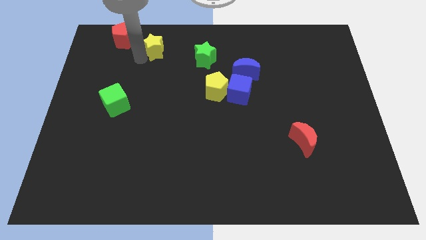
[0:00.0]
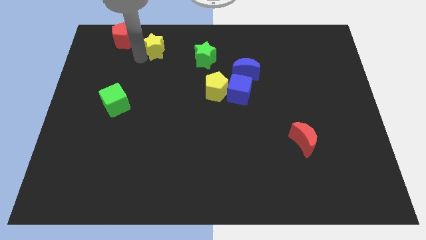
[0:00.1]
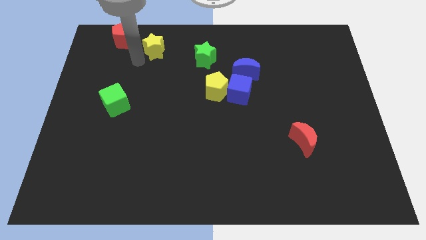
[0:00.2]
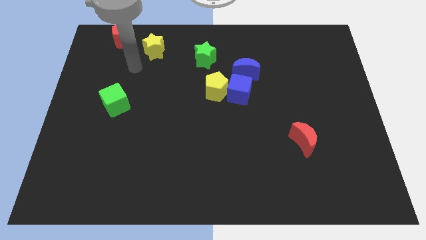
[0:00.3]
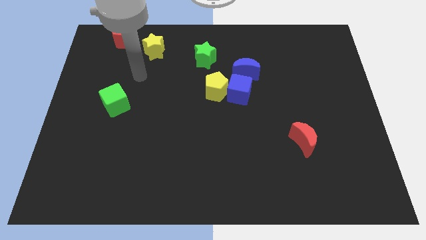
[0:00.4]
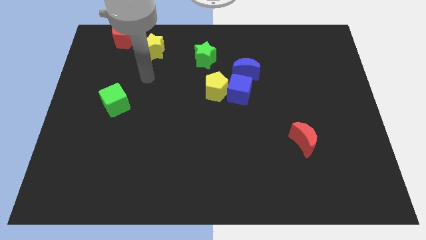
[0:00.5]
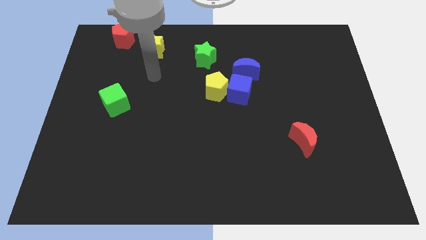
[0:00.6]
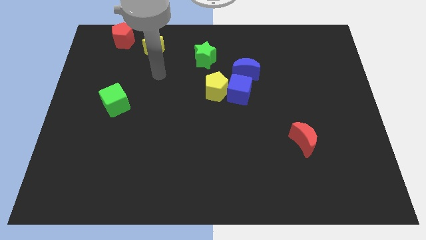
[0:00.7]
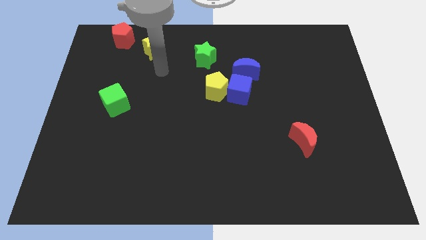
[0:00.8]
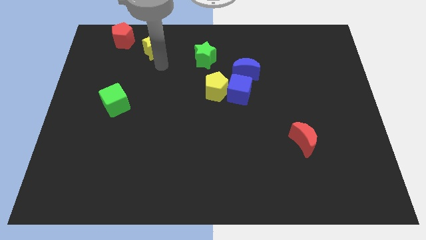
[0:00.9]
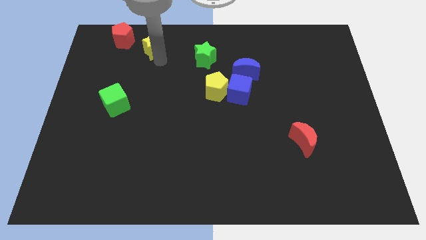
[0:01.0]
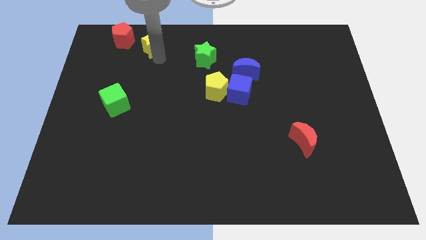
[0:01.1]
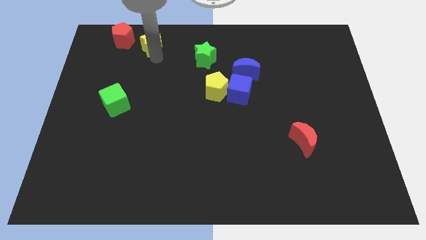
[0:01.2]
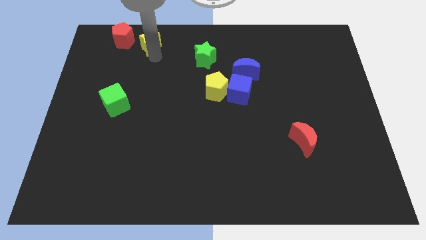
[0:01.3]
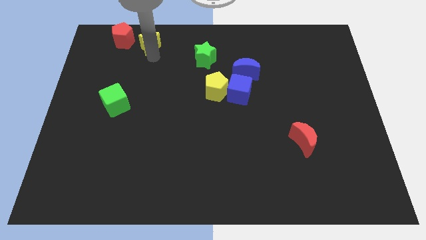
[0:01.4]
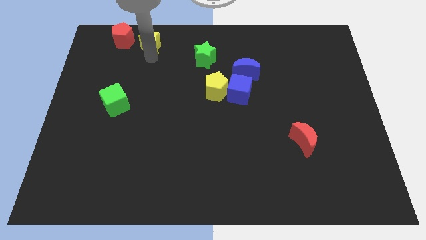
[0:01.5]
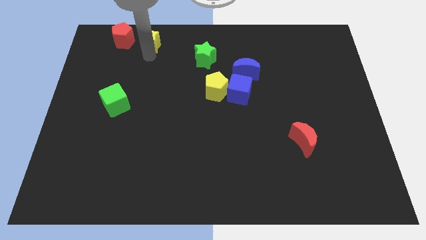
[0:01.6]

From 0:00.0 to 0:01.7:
move the yellow star right beside the red pentagon

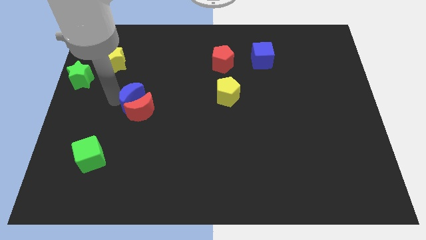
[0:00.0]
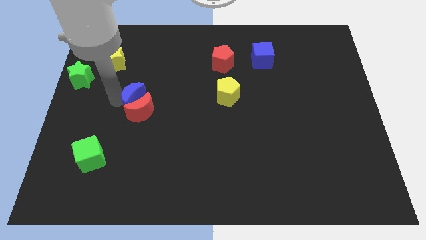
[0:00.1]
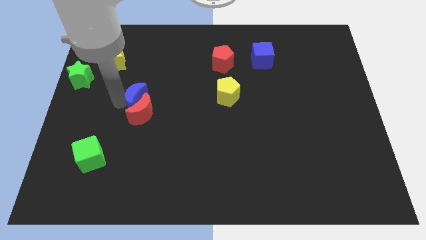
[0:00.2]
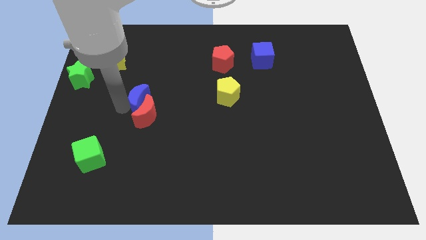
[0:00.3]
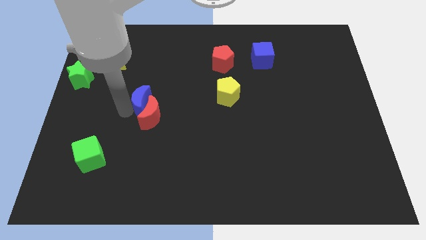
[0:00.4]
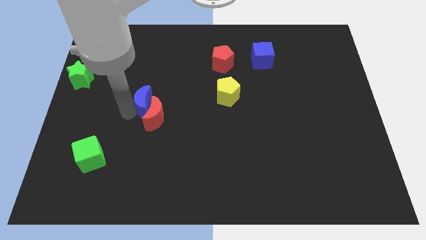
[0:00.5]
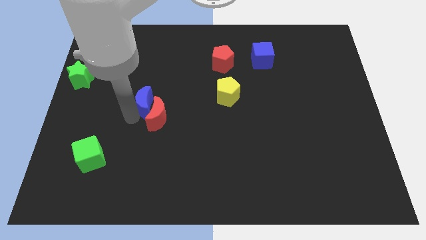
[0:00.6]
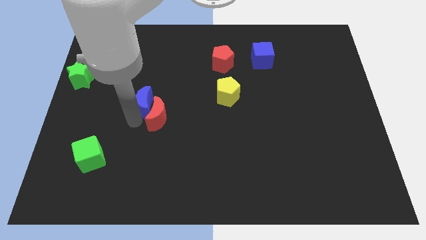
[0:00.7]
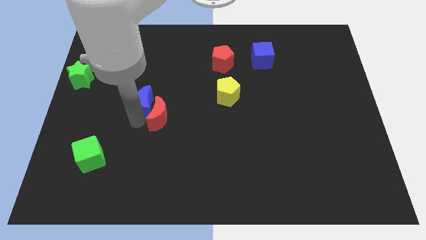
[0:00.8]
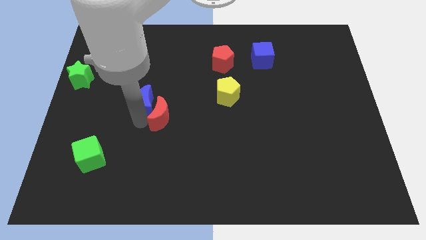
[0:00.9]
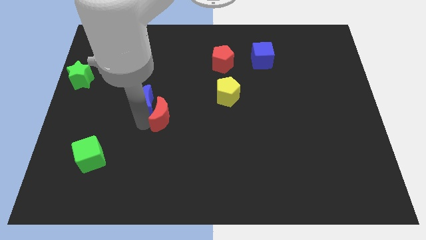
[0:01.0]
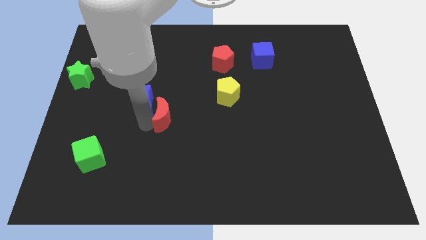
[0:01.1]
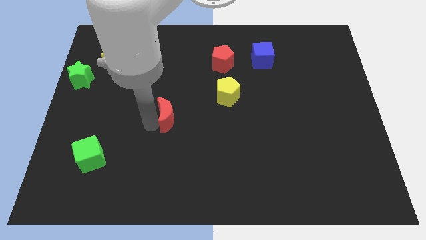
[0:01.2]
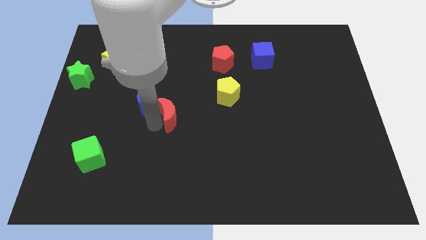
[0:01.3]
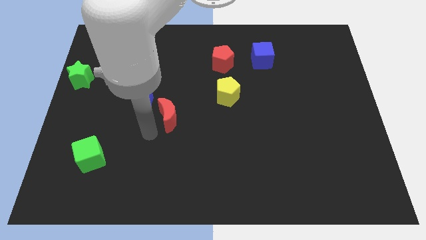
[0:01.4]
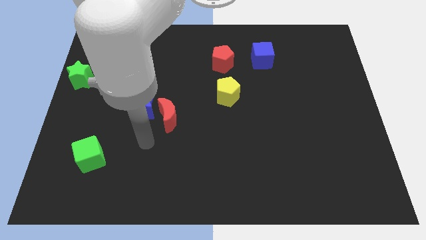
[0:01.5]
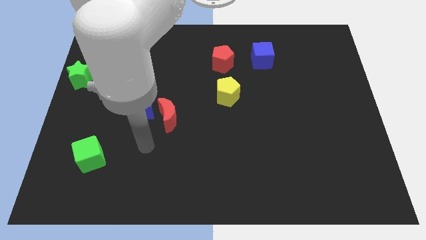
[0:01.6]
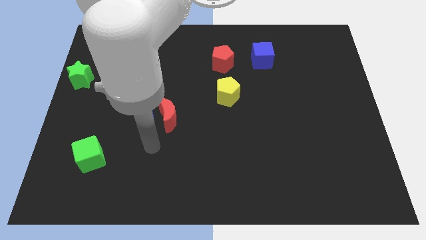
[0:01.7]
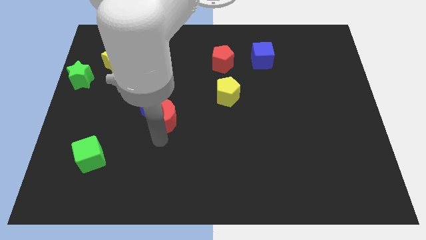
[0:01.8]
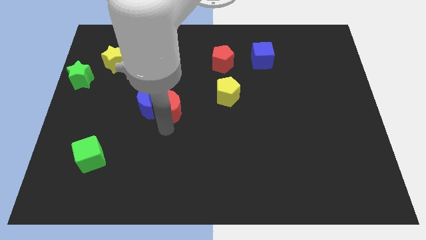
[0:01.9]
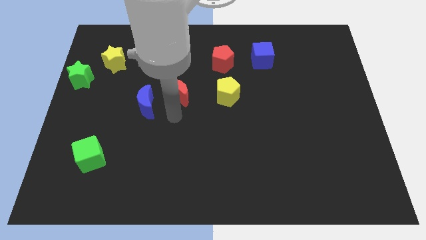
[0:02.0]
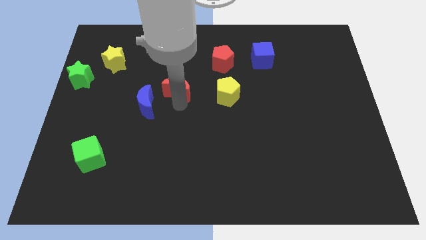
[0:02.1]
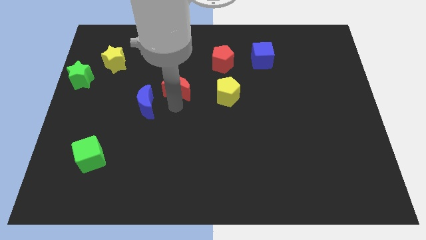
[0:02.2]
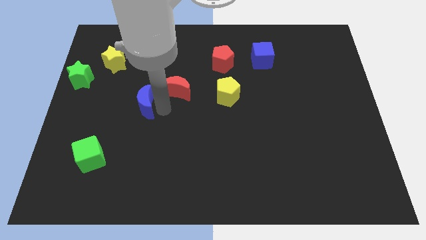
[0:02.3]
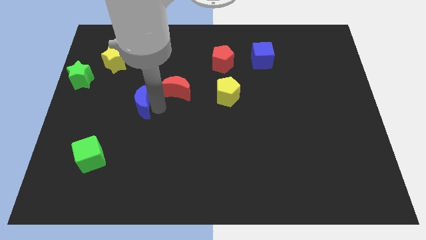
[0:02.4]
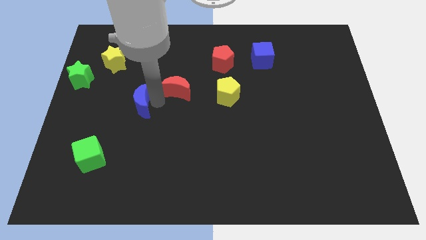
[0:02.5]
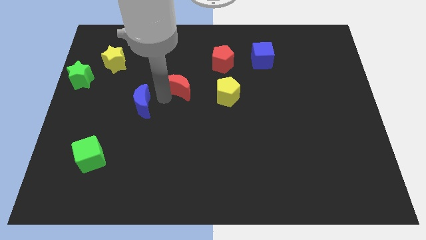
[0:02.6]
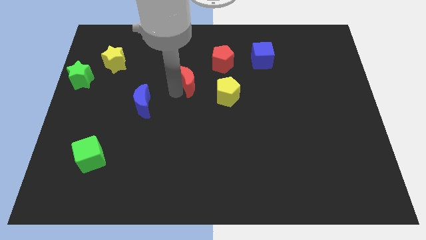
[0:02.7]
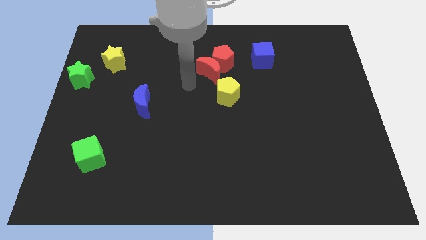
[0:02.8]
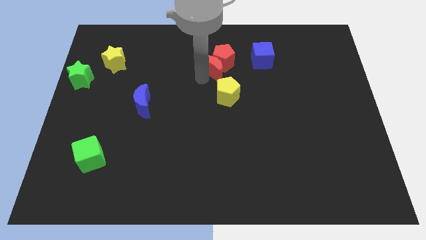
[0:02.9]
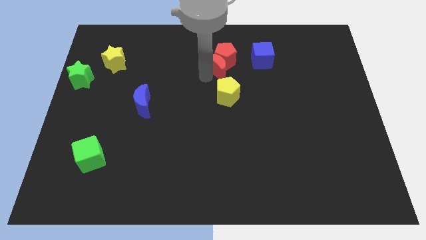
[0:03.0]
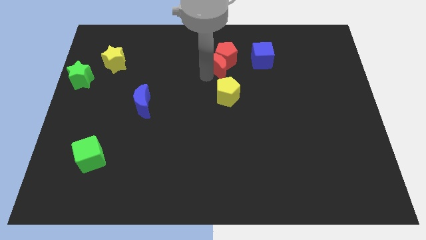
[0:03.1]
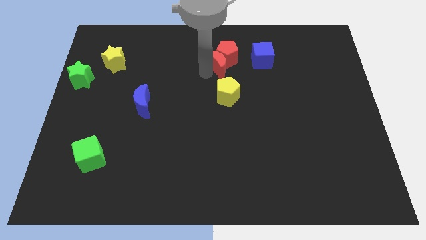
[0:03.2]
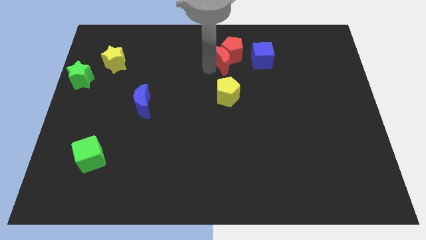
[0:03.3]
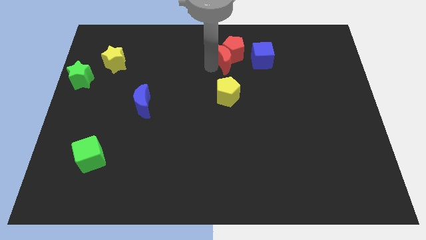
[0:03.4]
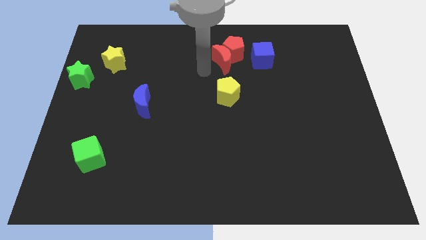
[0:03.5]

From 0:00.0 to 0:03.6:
push the red crescent into the red pentagon diagonally to the bottom left

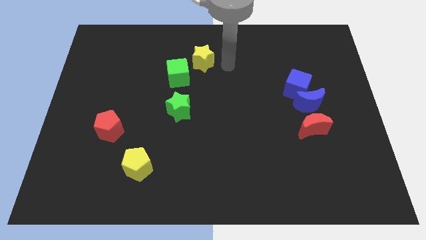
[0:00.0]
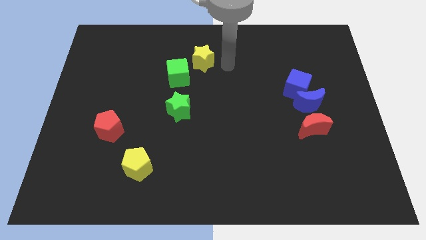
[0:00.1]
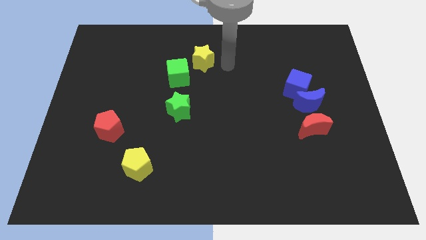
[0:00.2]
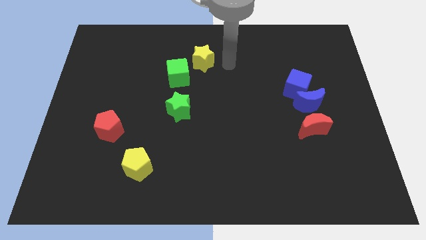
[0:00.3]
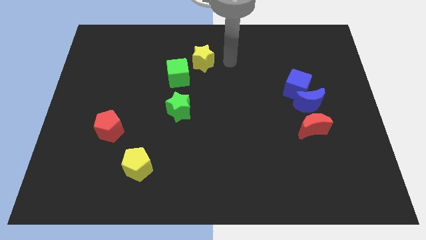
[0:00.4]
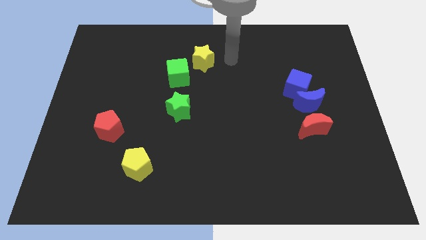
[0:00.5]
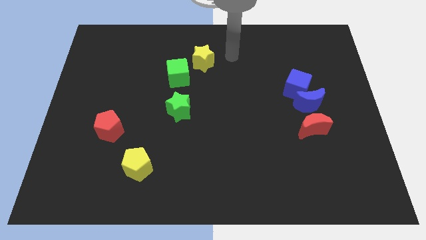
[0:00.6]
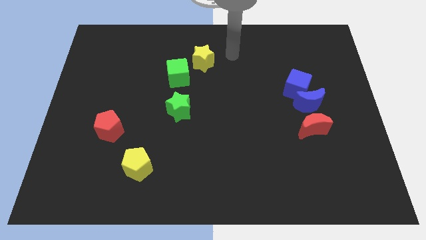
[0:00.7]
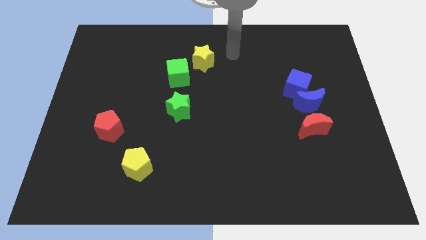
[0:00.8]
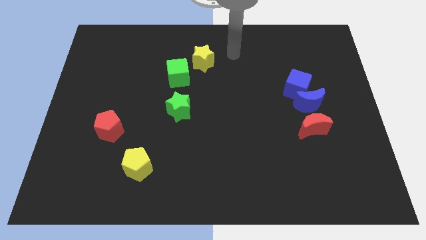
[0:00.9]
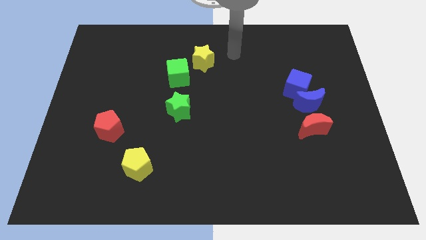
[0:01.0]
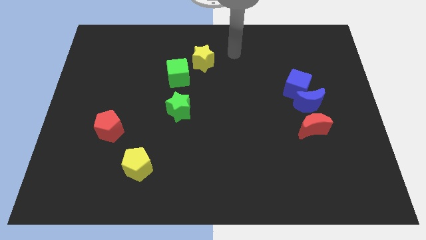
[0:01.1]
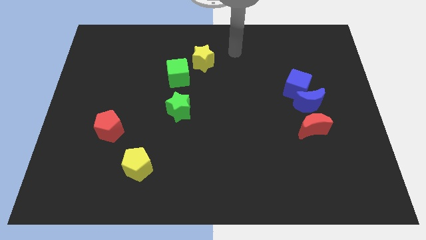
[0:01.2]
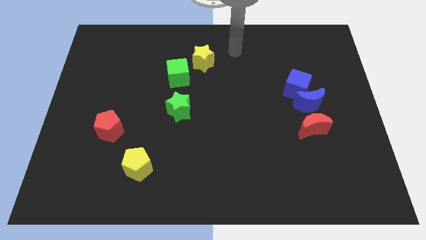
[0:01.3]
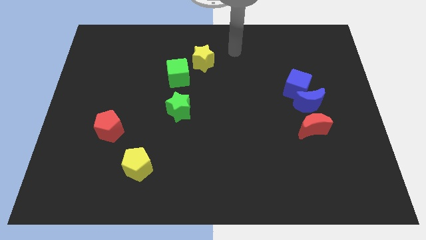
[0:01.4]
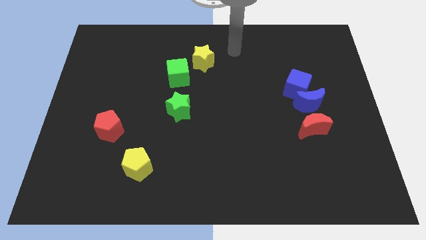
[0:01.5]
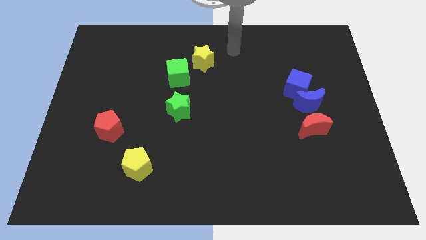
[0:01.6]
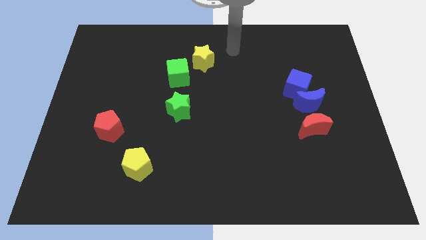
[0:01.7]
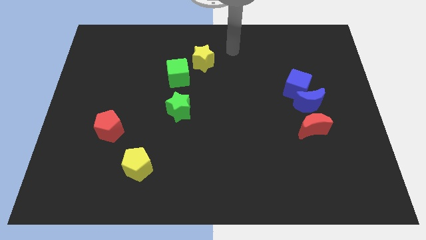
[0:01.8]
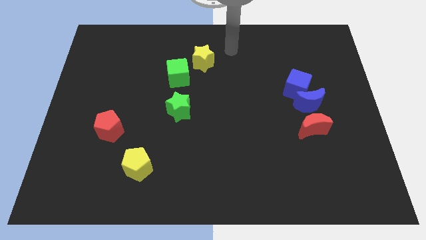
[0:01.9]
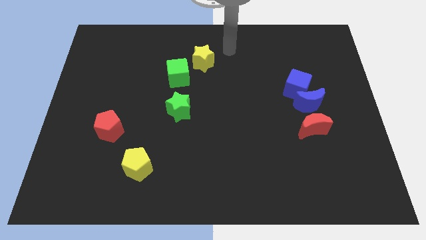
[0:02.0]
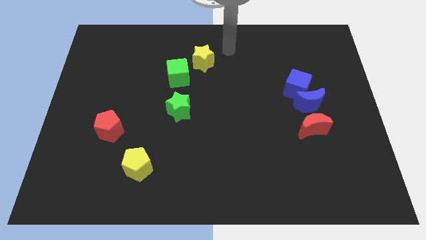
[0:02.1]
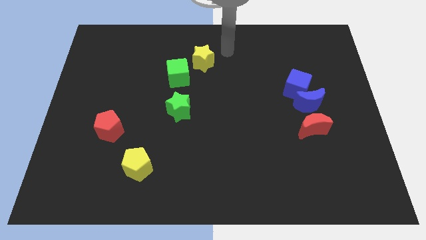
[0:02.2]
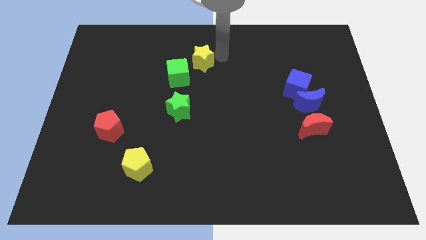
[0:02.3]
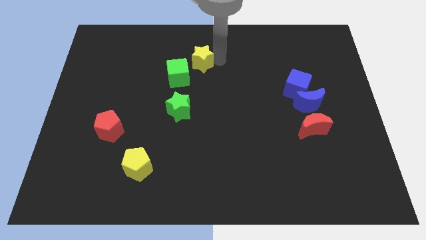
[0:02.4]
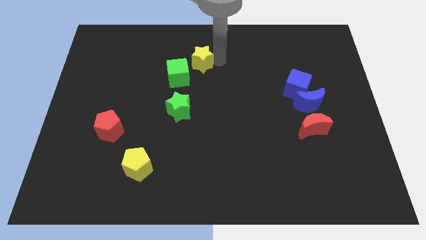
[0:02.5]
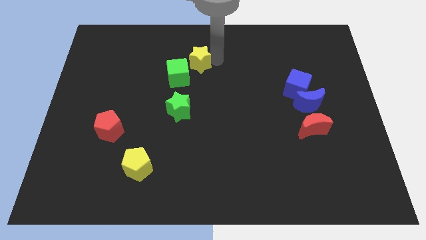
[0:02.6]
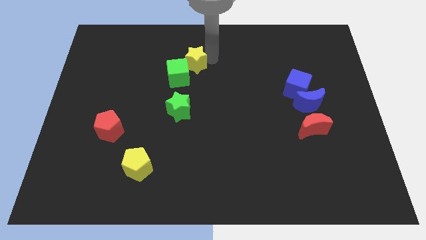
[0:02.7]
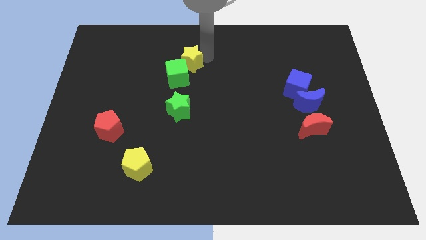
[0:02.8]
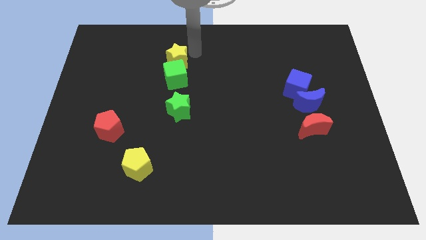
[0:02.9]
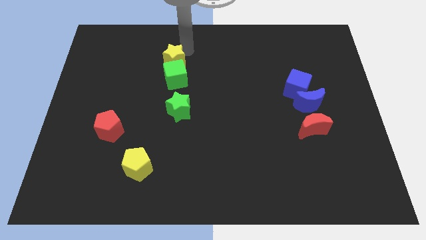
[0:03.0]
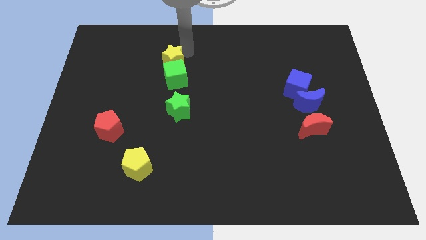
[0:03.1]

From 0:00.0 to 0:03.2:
place the yellow star at the top of the green cube

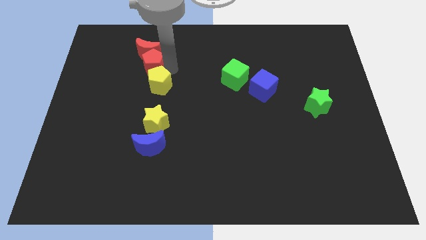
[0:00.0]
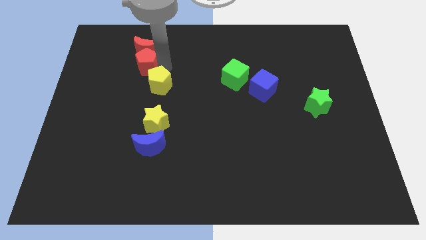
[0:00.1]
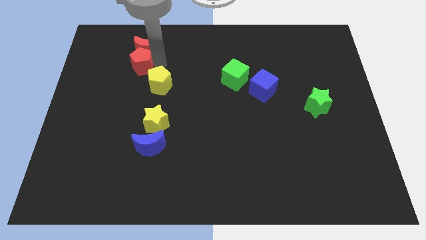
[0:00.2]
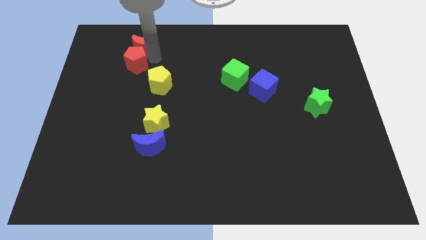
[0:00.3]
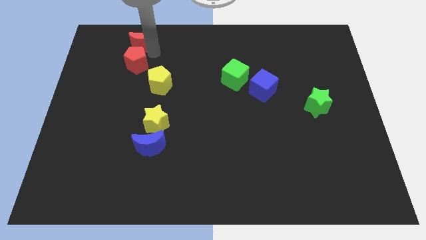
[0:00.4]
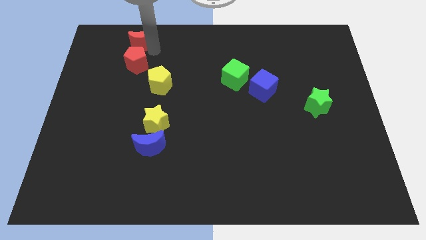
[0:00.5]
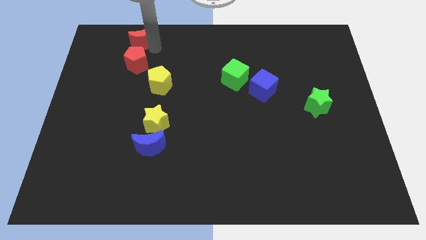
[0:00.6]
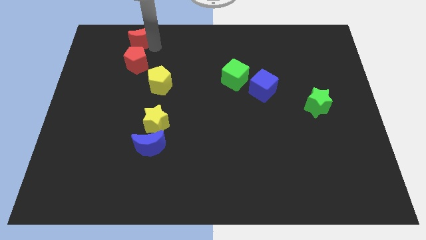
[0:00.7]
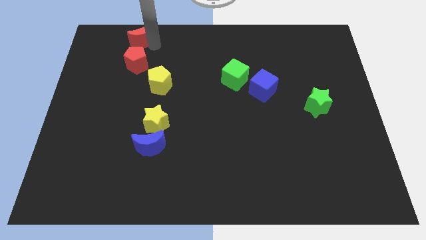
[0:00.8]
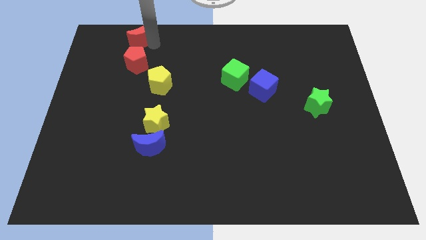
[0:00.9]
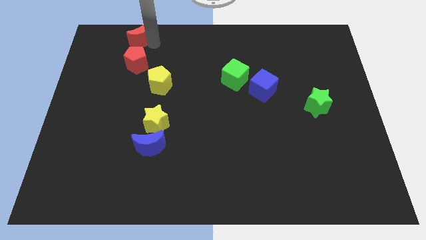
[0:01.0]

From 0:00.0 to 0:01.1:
push the red blocks away from the yellow pentagon
